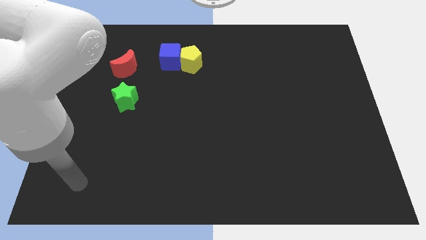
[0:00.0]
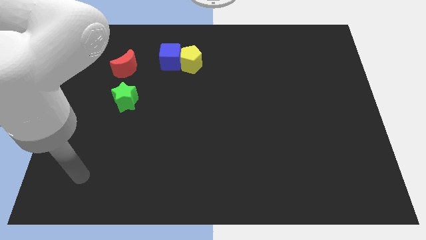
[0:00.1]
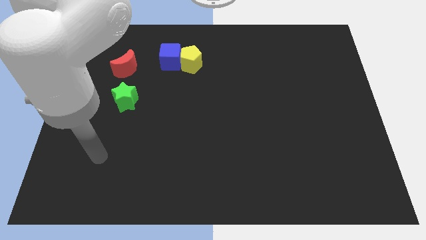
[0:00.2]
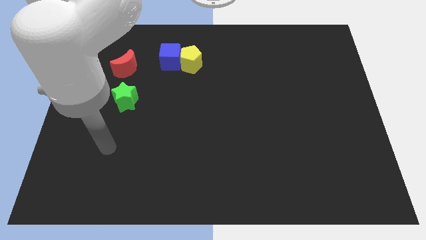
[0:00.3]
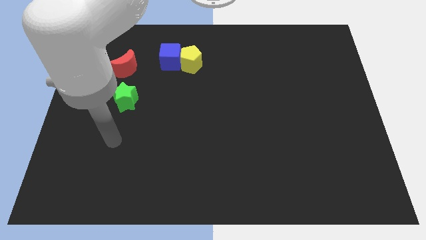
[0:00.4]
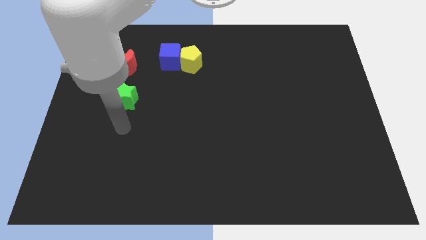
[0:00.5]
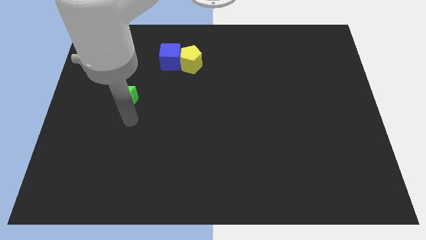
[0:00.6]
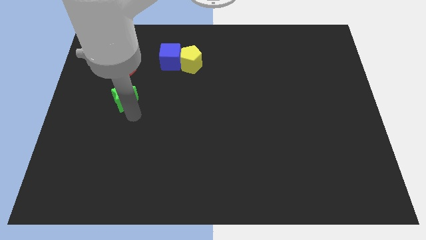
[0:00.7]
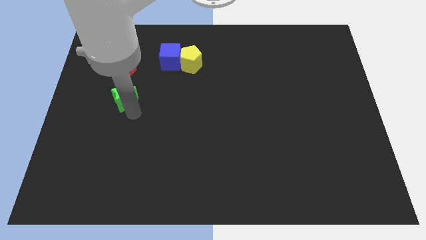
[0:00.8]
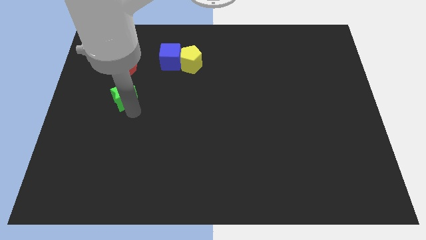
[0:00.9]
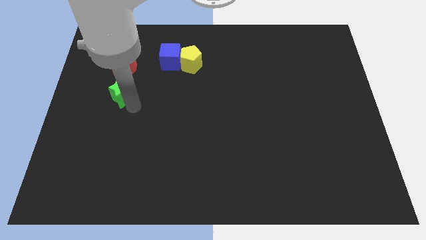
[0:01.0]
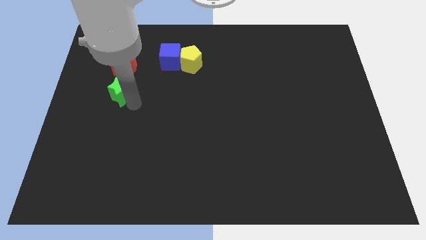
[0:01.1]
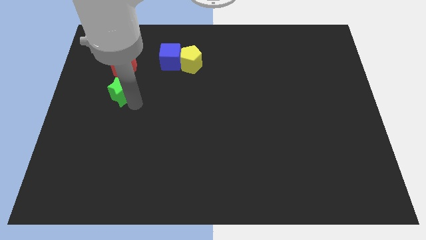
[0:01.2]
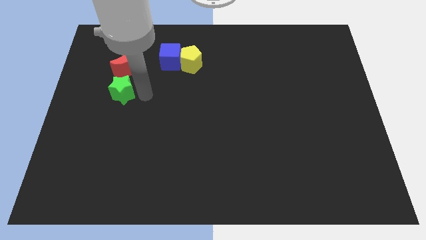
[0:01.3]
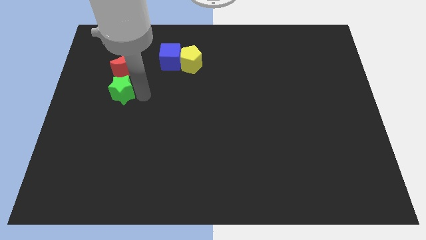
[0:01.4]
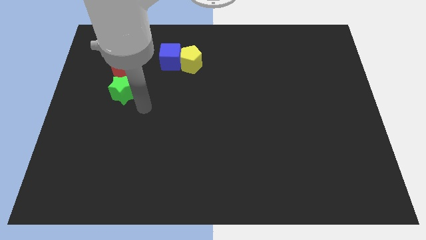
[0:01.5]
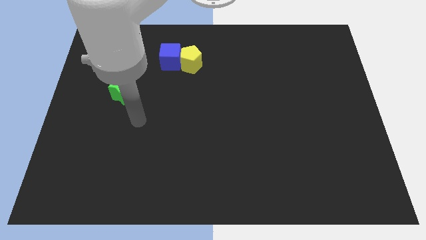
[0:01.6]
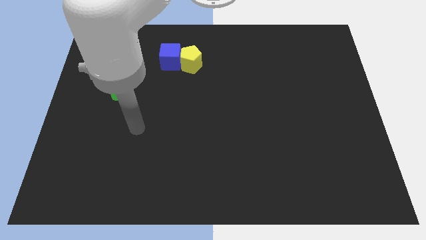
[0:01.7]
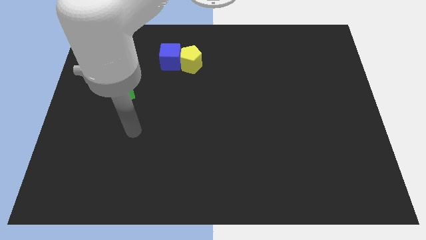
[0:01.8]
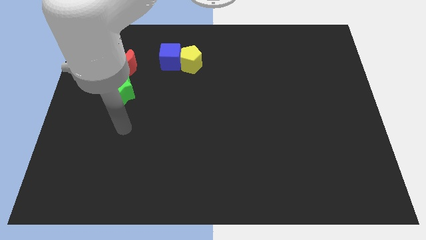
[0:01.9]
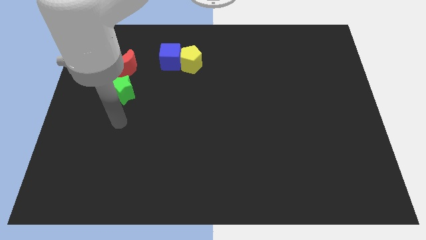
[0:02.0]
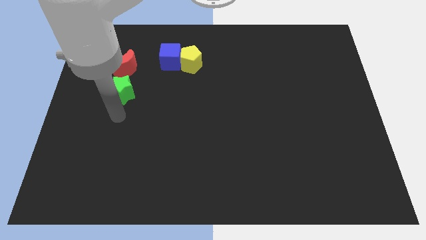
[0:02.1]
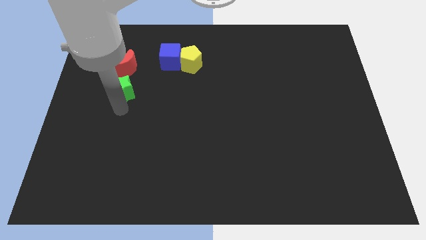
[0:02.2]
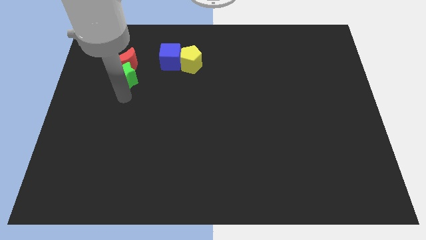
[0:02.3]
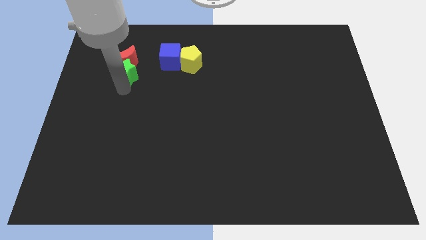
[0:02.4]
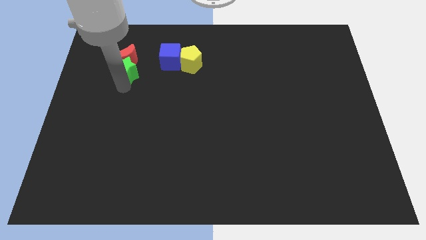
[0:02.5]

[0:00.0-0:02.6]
push the star next to the moon

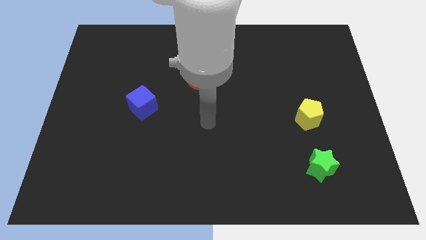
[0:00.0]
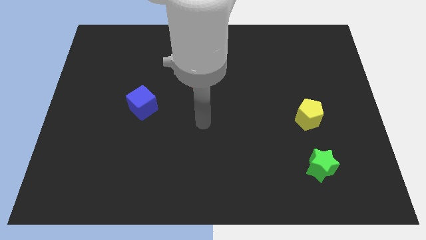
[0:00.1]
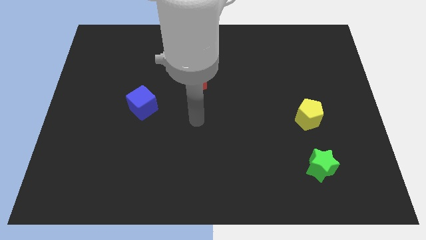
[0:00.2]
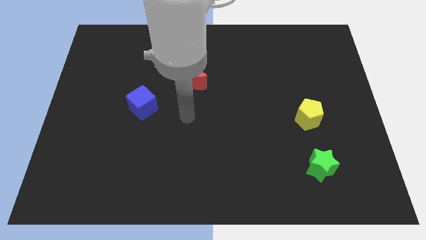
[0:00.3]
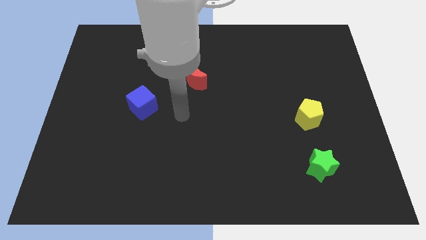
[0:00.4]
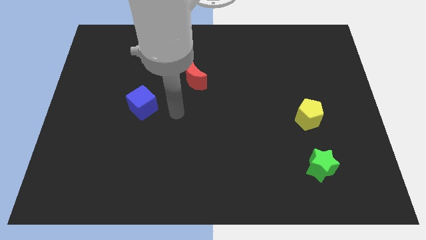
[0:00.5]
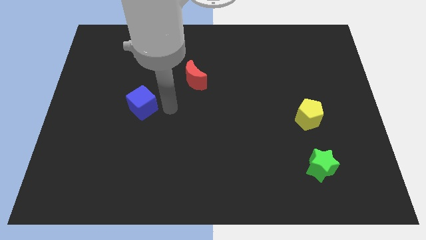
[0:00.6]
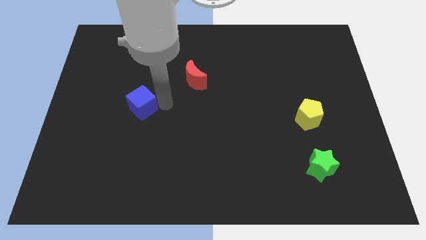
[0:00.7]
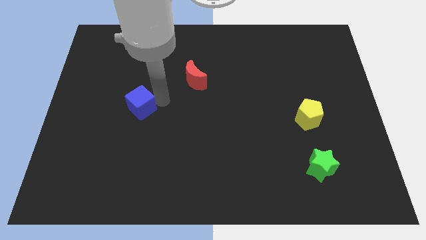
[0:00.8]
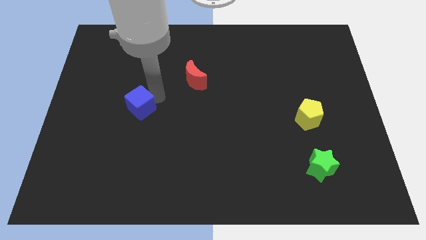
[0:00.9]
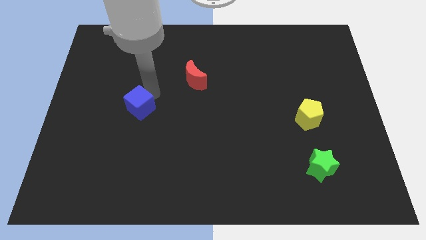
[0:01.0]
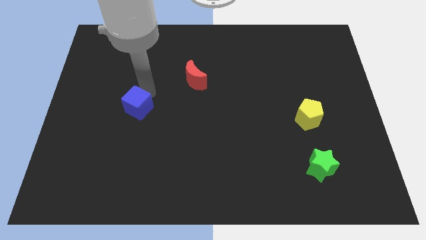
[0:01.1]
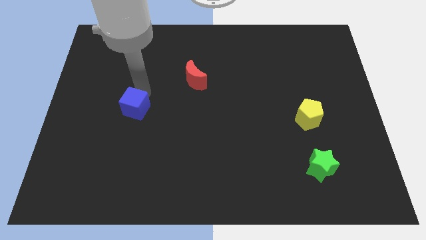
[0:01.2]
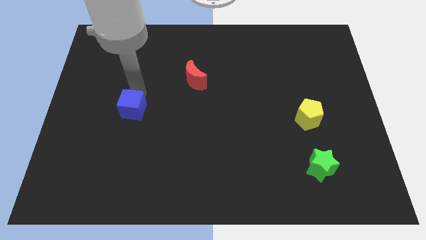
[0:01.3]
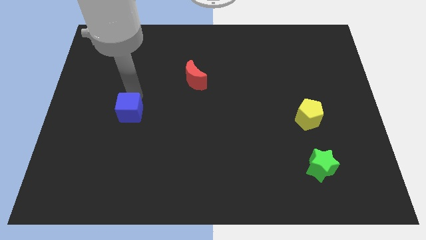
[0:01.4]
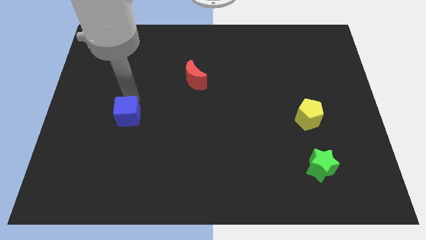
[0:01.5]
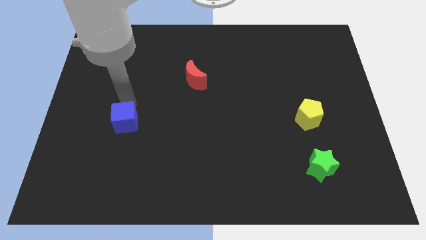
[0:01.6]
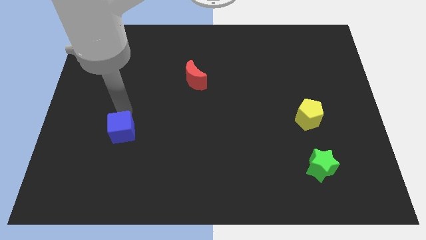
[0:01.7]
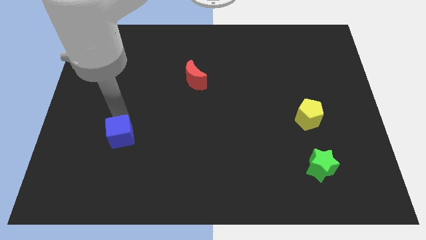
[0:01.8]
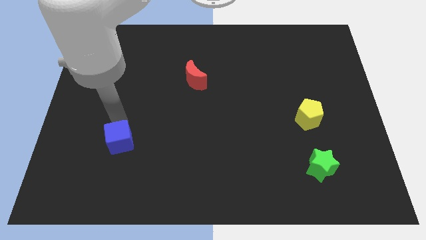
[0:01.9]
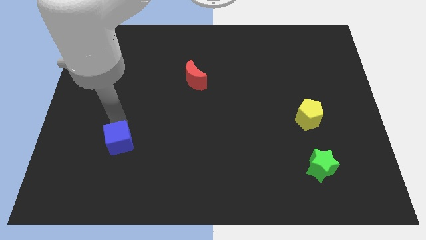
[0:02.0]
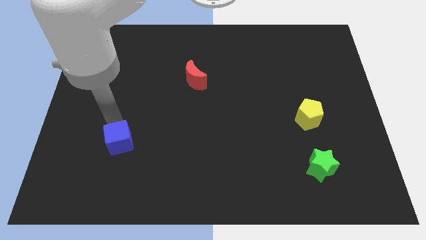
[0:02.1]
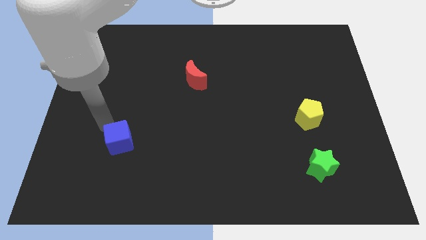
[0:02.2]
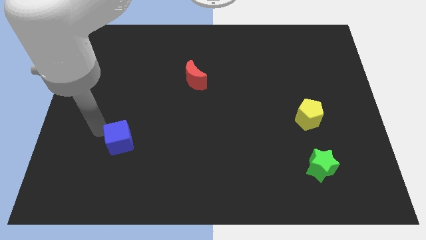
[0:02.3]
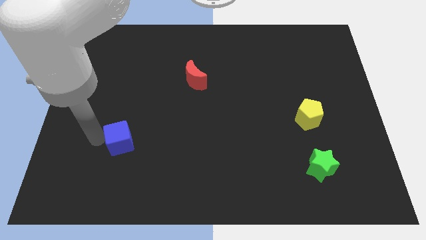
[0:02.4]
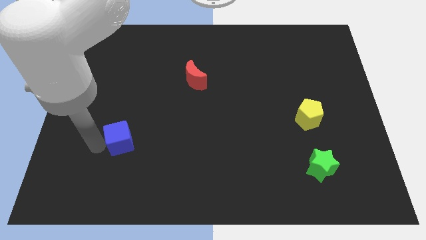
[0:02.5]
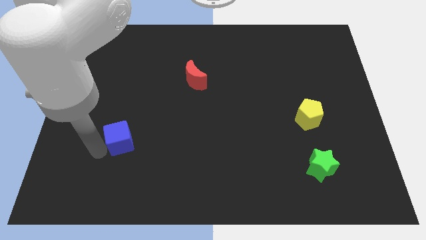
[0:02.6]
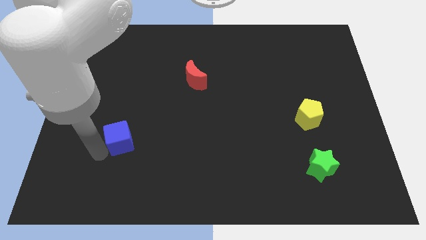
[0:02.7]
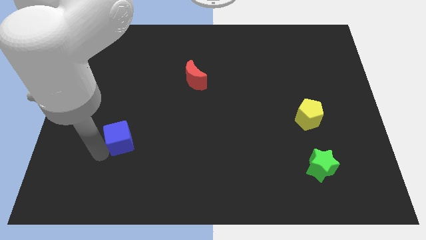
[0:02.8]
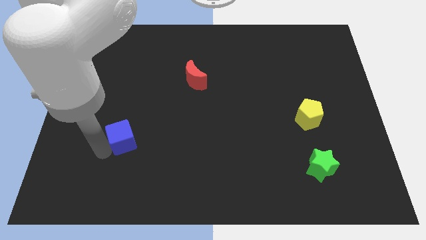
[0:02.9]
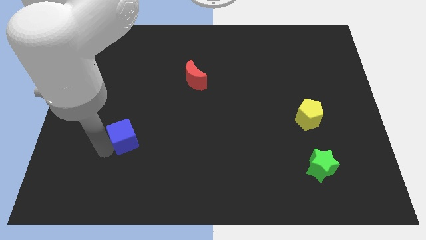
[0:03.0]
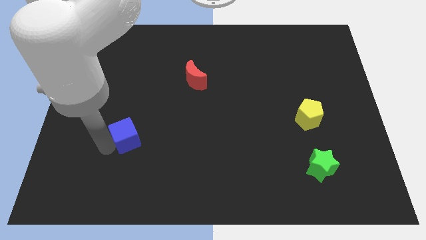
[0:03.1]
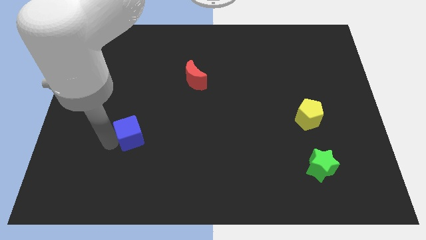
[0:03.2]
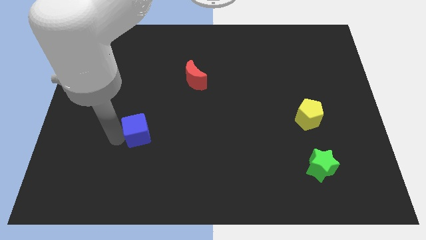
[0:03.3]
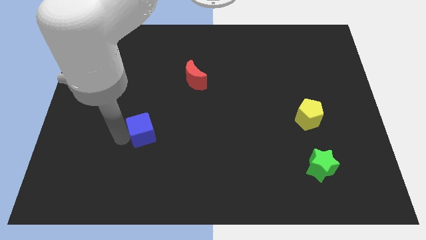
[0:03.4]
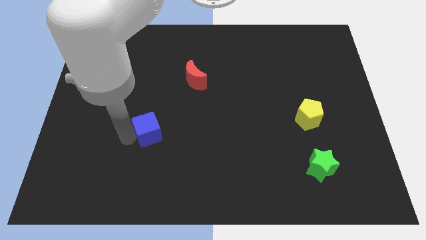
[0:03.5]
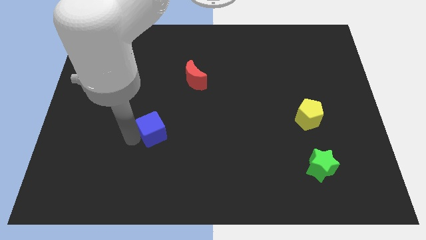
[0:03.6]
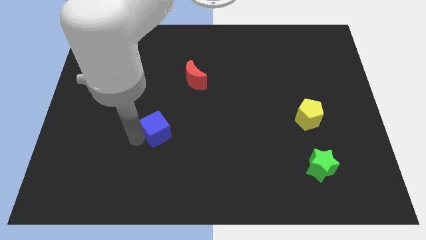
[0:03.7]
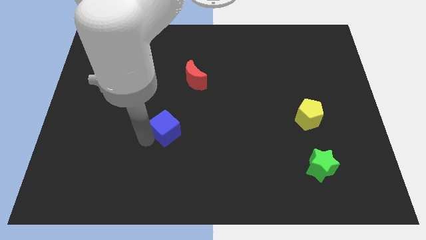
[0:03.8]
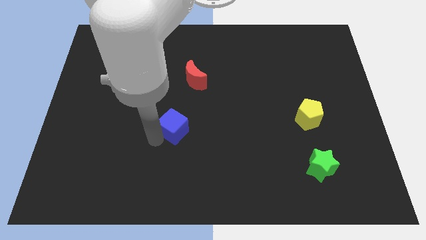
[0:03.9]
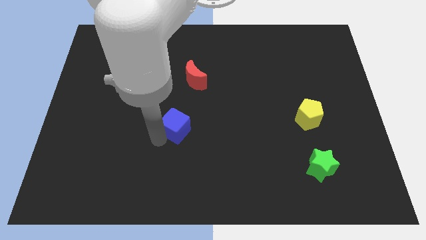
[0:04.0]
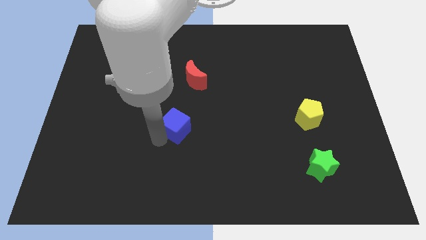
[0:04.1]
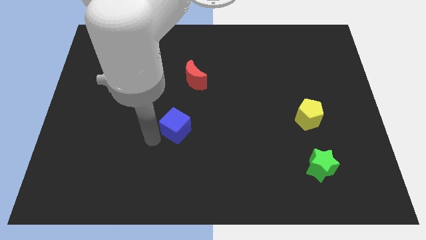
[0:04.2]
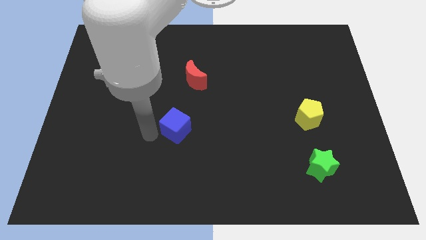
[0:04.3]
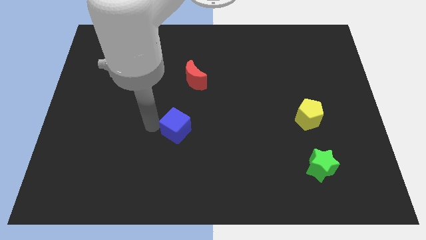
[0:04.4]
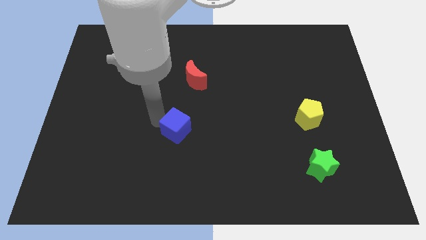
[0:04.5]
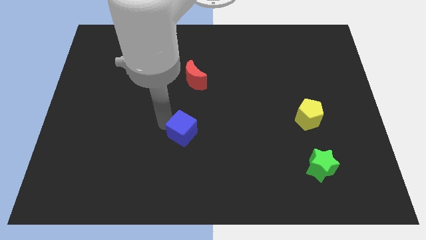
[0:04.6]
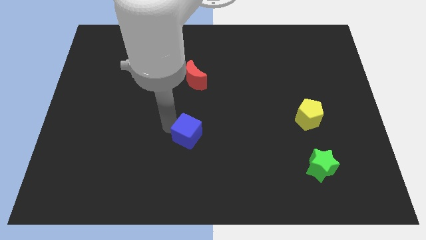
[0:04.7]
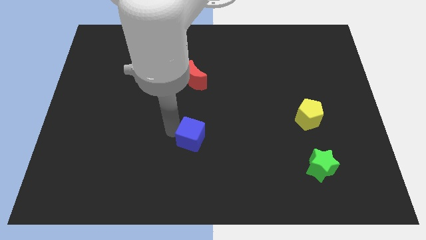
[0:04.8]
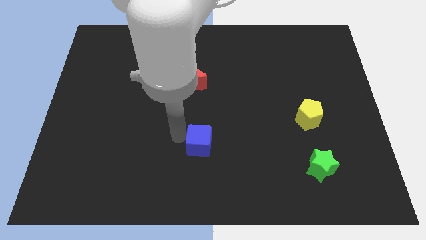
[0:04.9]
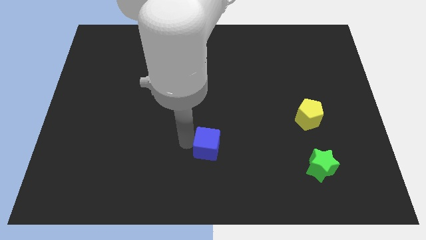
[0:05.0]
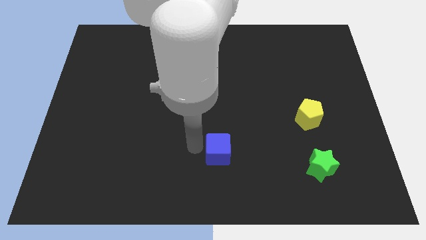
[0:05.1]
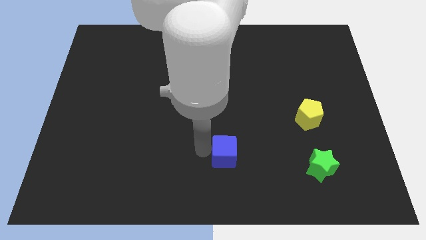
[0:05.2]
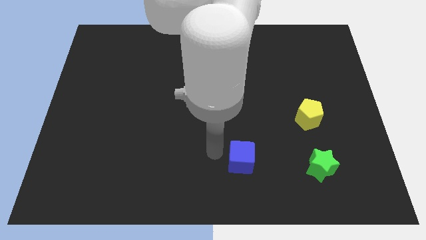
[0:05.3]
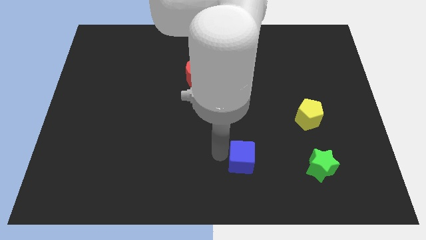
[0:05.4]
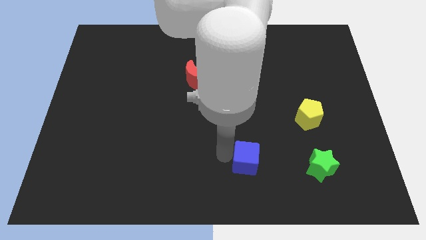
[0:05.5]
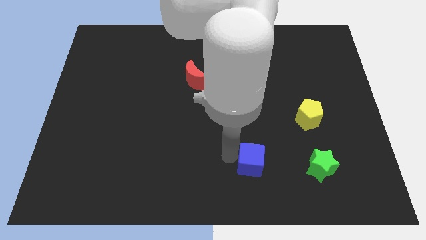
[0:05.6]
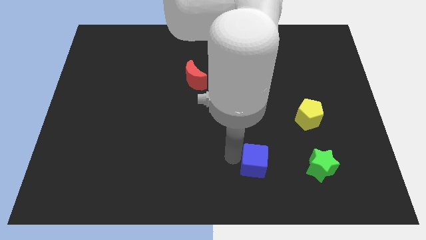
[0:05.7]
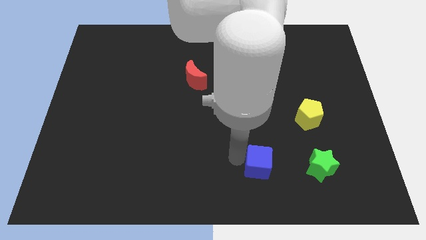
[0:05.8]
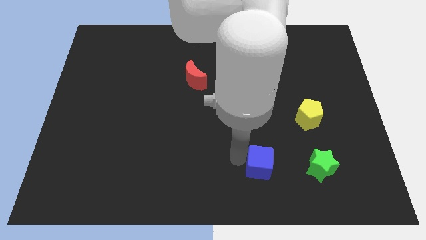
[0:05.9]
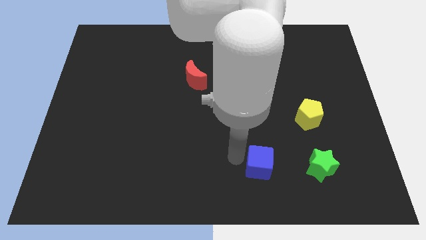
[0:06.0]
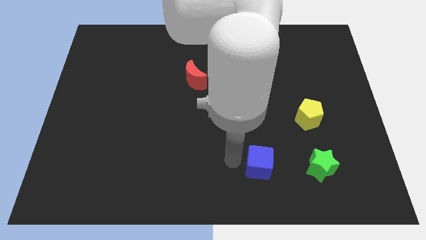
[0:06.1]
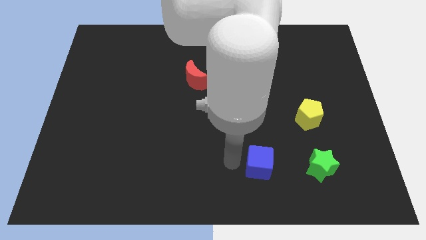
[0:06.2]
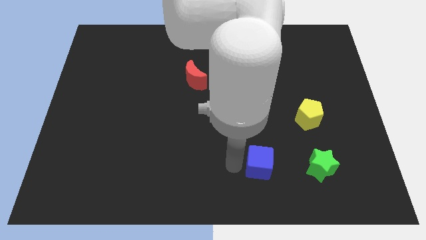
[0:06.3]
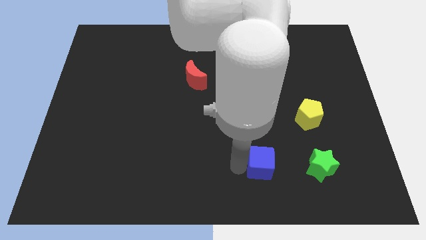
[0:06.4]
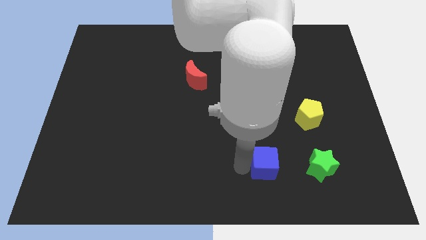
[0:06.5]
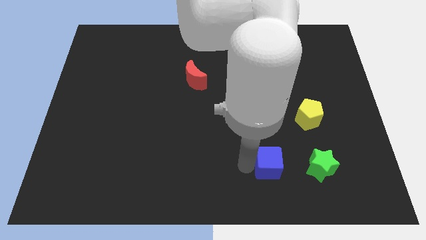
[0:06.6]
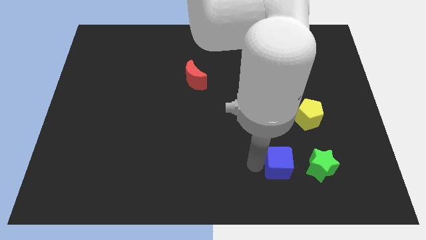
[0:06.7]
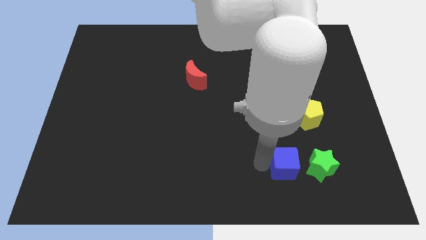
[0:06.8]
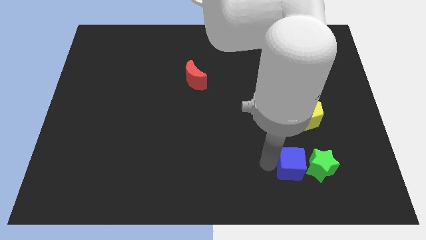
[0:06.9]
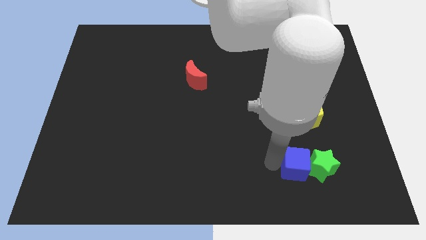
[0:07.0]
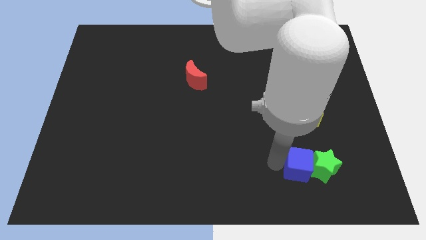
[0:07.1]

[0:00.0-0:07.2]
move the blue cube next to the green star
